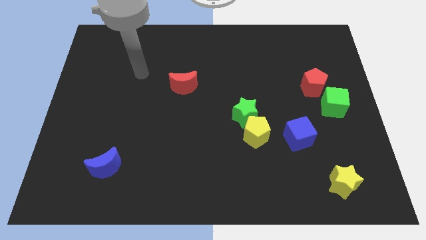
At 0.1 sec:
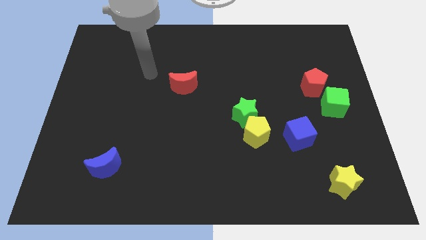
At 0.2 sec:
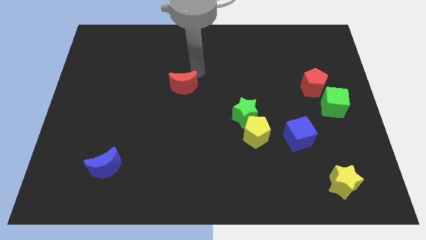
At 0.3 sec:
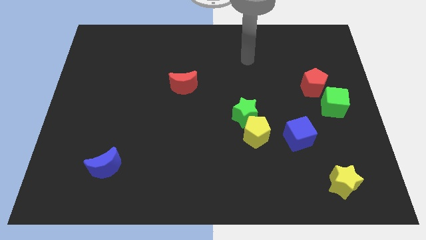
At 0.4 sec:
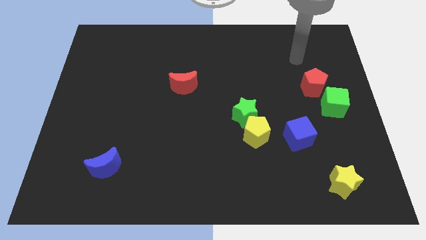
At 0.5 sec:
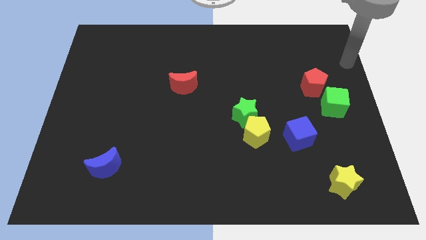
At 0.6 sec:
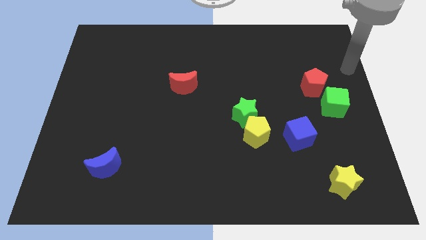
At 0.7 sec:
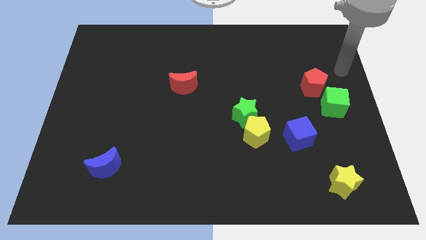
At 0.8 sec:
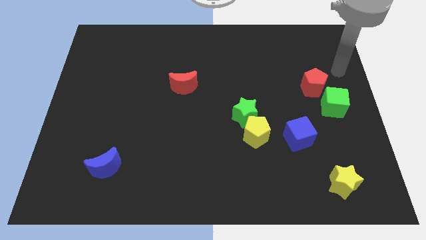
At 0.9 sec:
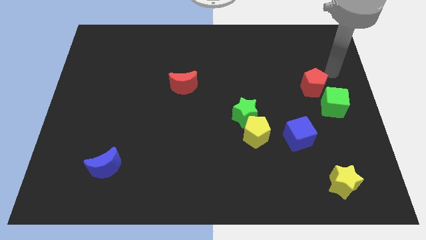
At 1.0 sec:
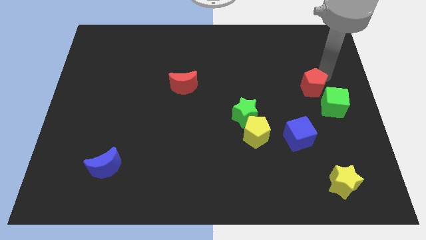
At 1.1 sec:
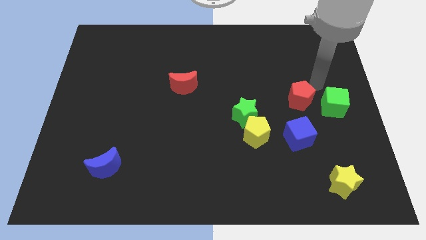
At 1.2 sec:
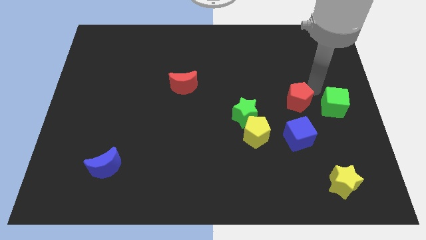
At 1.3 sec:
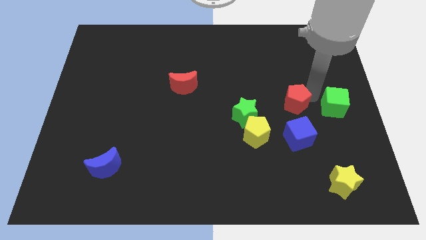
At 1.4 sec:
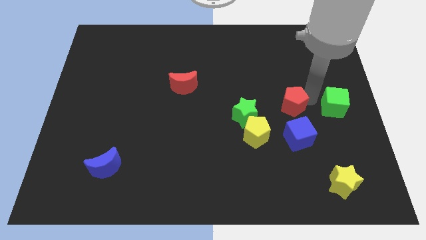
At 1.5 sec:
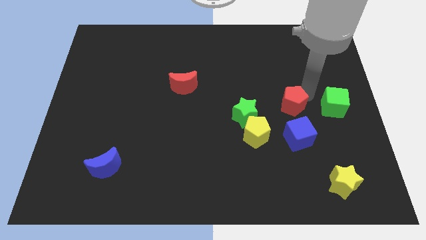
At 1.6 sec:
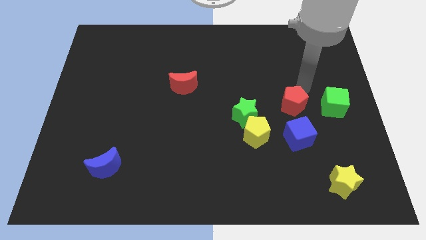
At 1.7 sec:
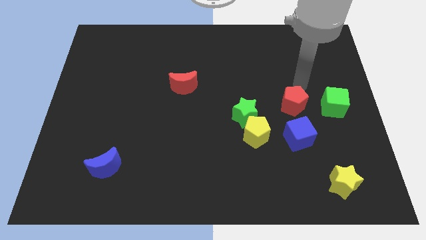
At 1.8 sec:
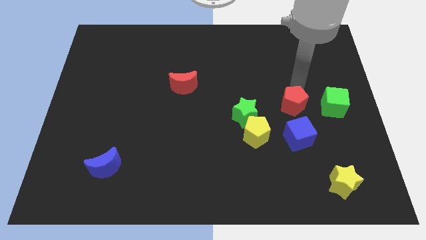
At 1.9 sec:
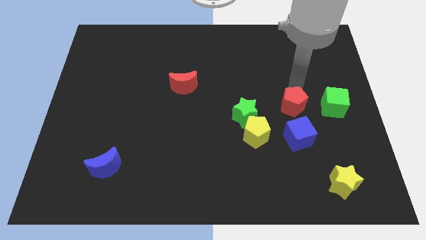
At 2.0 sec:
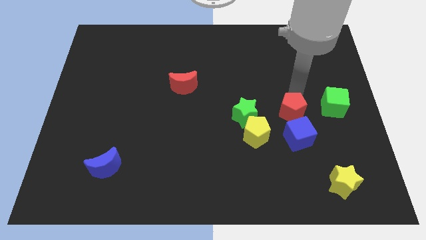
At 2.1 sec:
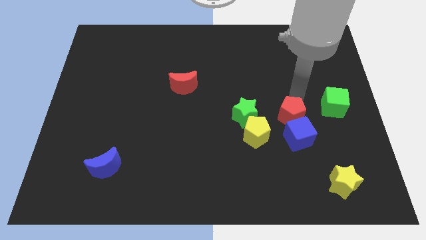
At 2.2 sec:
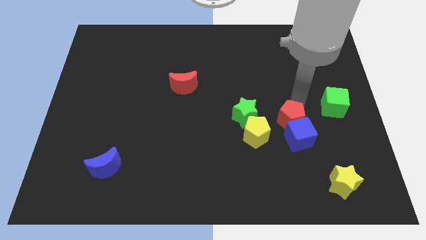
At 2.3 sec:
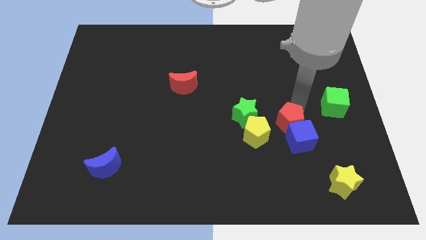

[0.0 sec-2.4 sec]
move the red pentagon next to the blue cube

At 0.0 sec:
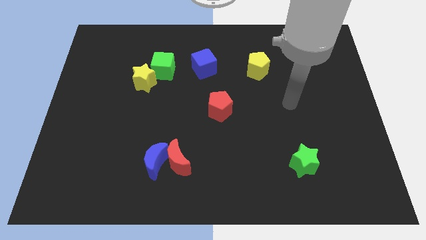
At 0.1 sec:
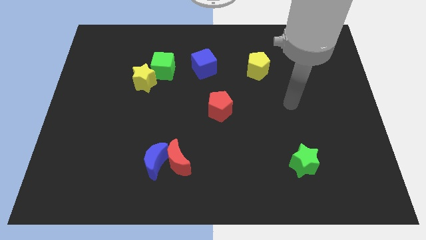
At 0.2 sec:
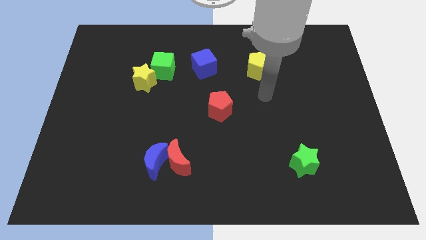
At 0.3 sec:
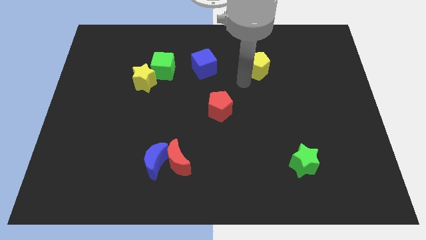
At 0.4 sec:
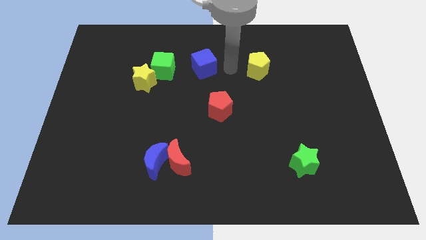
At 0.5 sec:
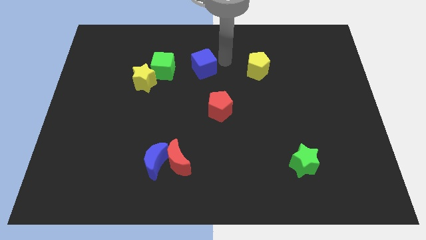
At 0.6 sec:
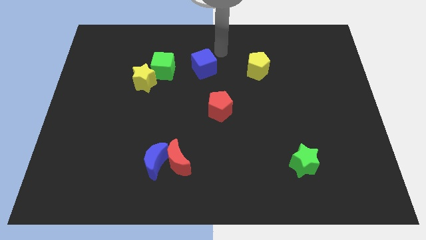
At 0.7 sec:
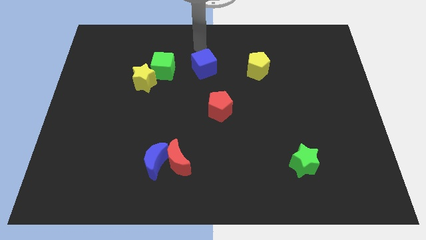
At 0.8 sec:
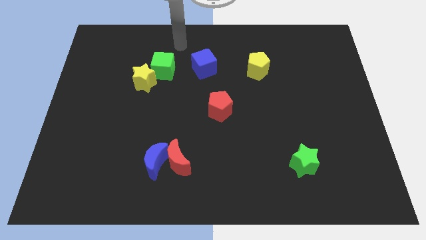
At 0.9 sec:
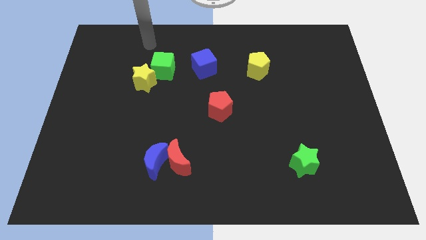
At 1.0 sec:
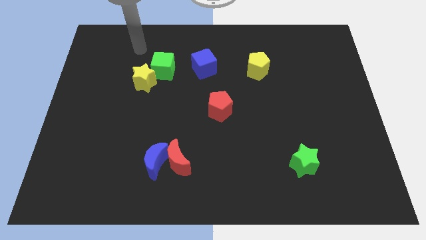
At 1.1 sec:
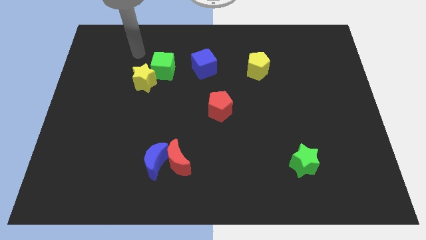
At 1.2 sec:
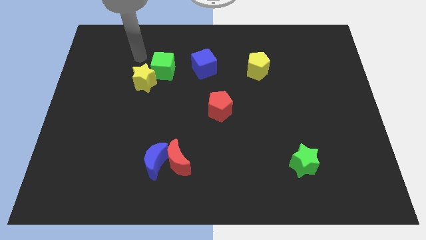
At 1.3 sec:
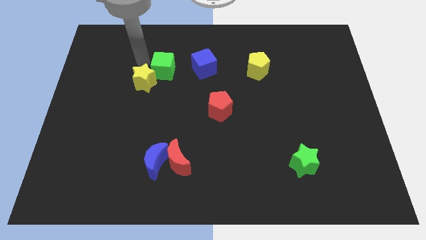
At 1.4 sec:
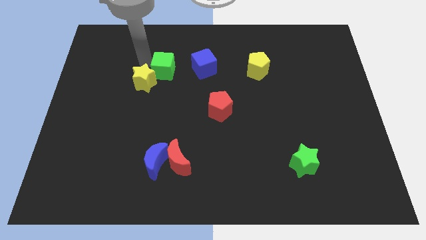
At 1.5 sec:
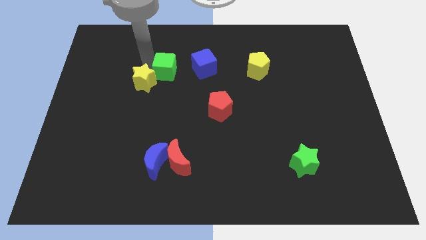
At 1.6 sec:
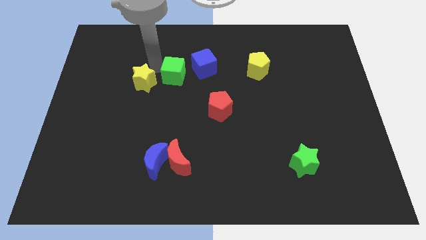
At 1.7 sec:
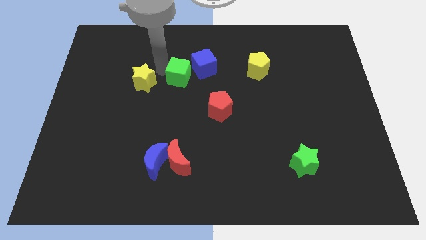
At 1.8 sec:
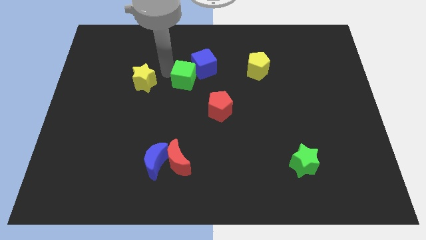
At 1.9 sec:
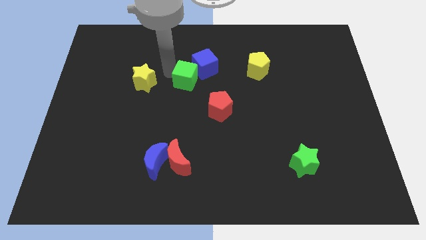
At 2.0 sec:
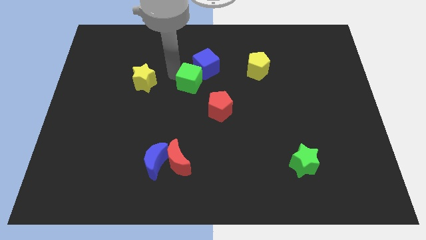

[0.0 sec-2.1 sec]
slide the green cube next to the blue cube

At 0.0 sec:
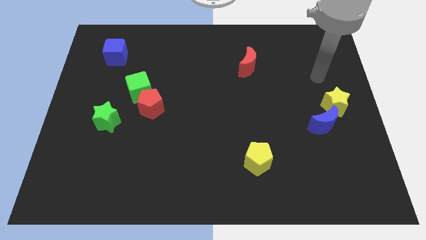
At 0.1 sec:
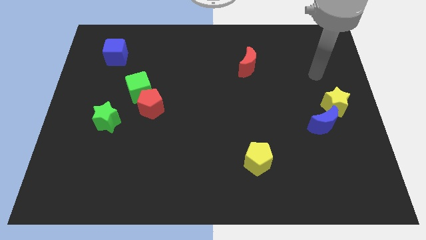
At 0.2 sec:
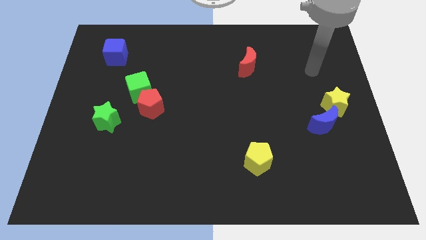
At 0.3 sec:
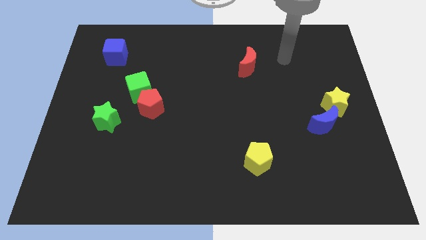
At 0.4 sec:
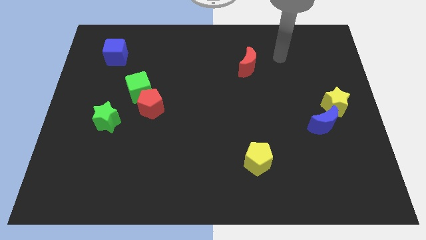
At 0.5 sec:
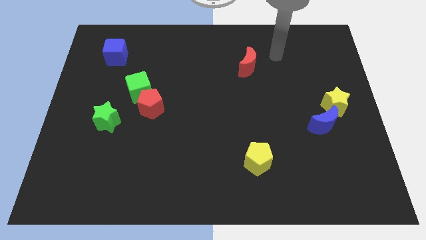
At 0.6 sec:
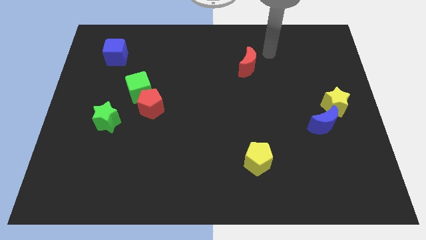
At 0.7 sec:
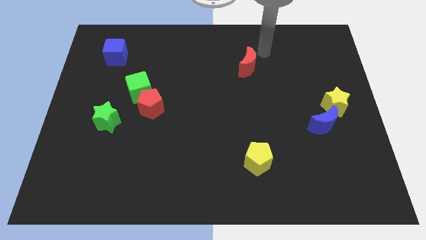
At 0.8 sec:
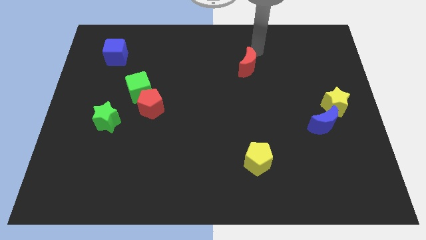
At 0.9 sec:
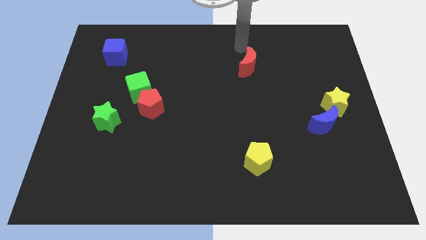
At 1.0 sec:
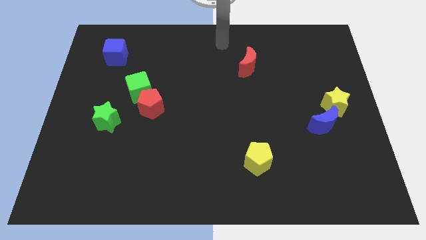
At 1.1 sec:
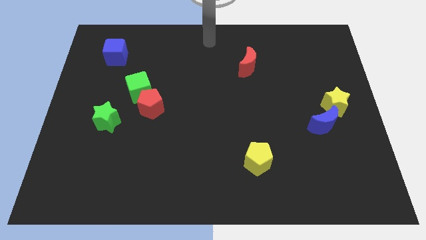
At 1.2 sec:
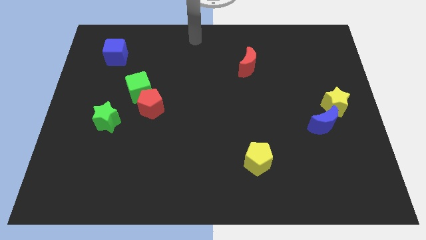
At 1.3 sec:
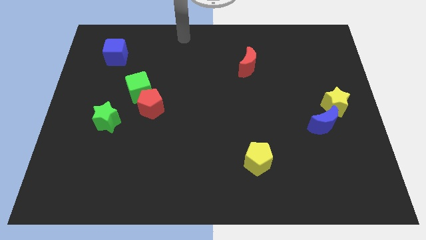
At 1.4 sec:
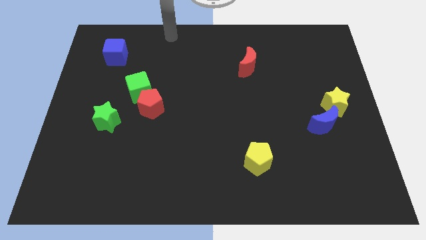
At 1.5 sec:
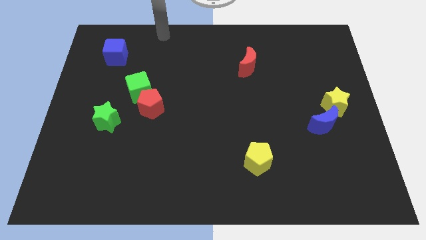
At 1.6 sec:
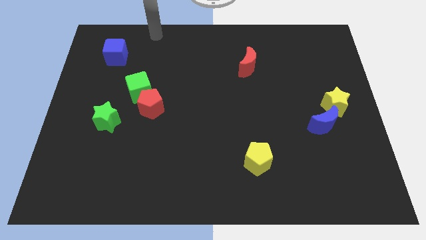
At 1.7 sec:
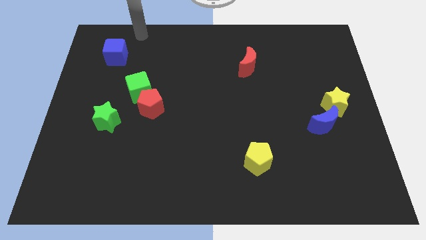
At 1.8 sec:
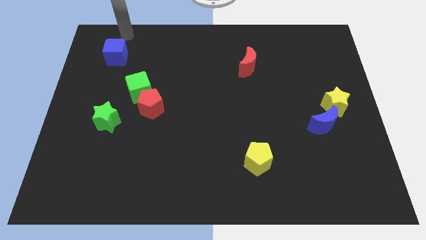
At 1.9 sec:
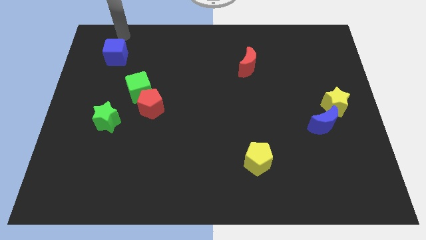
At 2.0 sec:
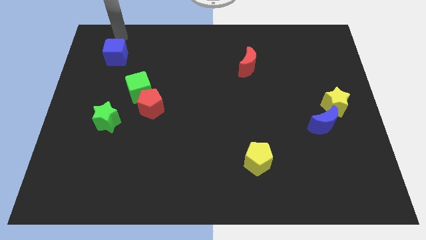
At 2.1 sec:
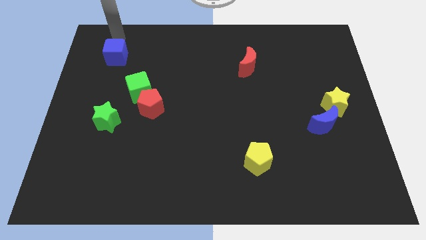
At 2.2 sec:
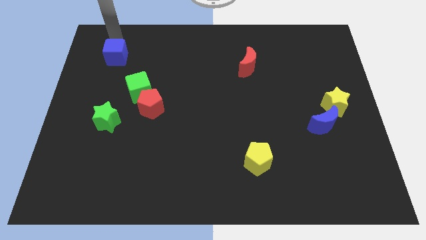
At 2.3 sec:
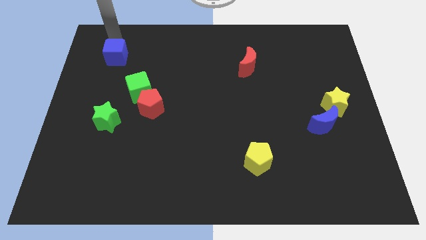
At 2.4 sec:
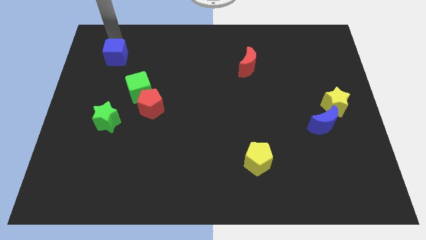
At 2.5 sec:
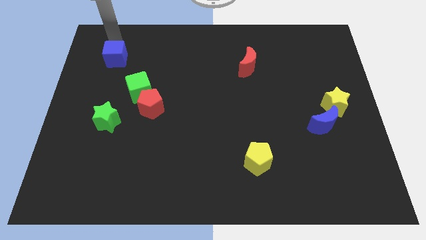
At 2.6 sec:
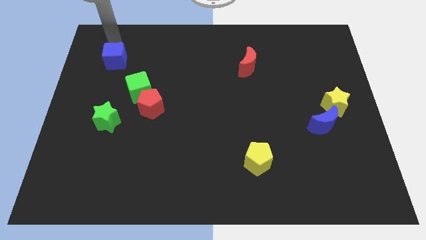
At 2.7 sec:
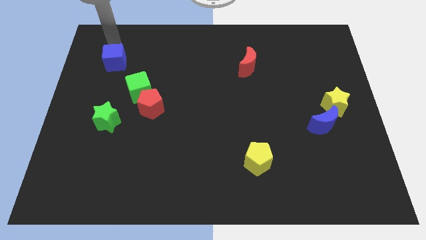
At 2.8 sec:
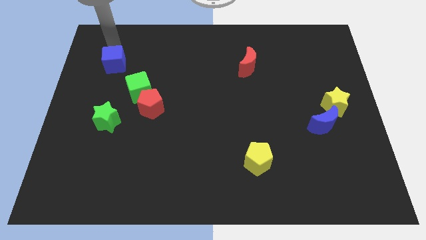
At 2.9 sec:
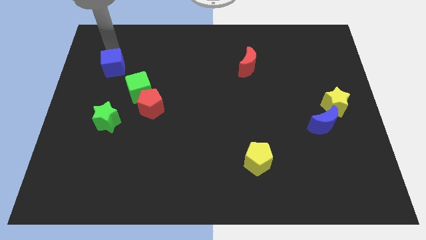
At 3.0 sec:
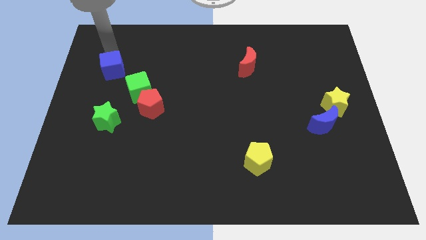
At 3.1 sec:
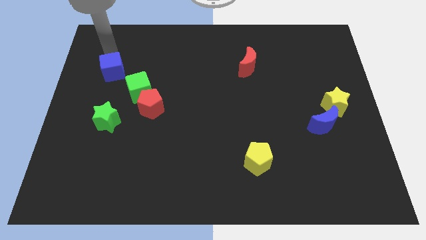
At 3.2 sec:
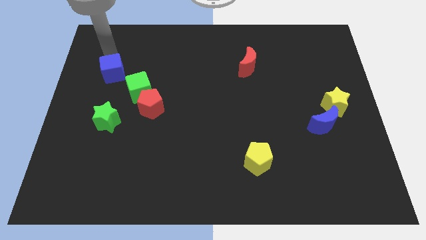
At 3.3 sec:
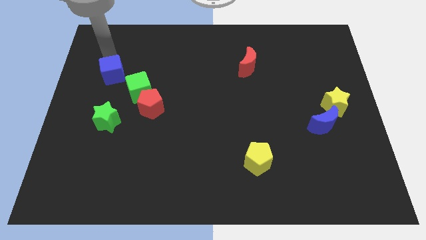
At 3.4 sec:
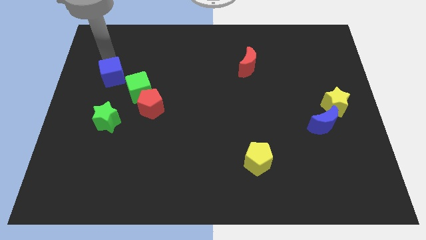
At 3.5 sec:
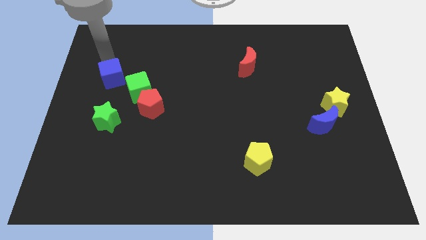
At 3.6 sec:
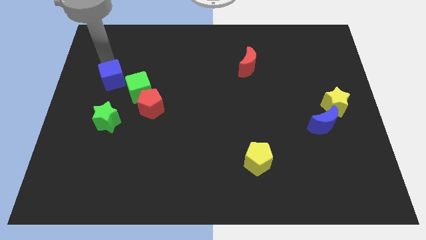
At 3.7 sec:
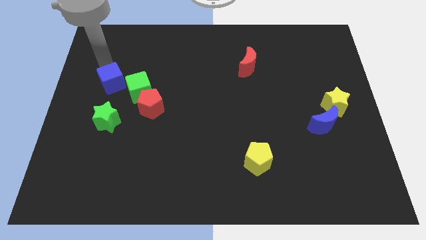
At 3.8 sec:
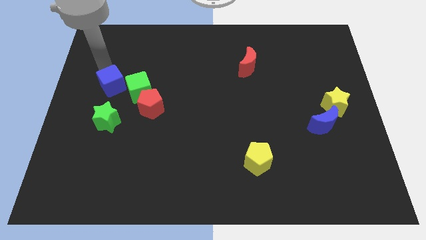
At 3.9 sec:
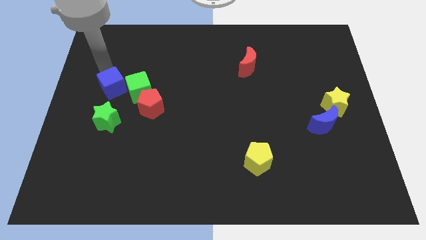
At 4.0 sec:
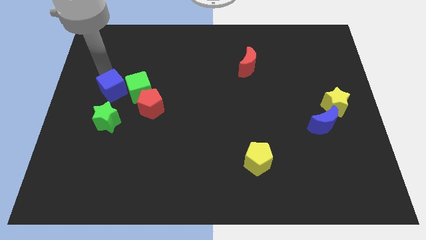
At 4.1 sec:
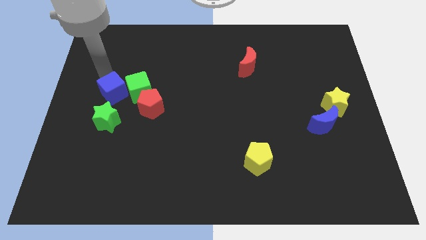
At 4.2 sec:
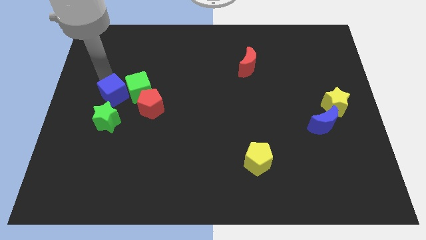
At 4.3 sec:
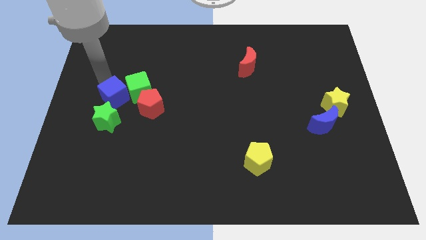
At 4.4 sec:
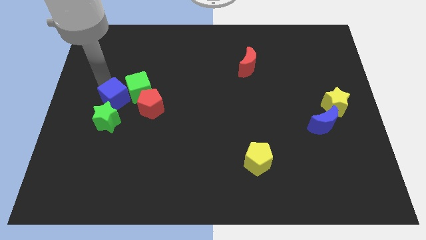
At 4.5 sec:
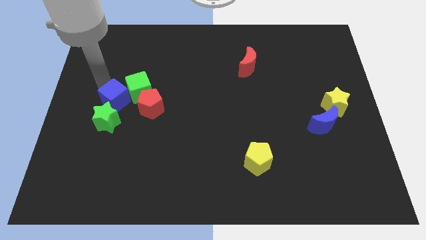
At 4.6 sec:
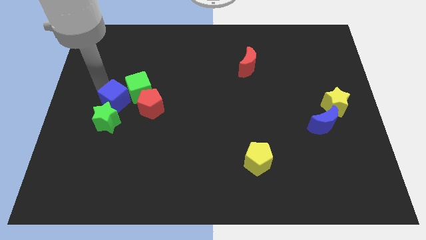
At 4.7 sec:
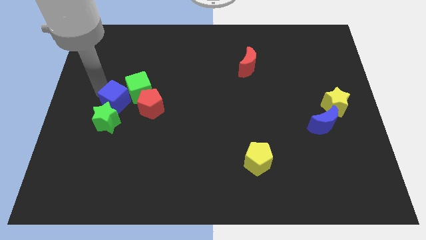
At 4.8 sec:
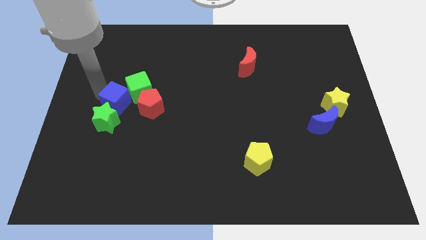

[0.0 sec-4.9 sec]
put the blue cube to the green star
